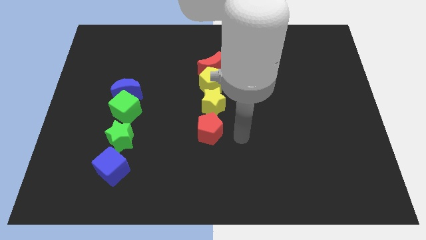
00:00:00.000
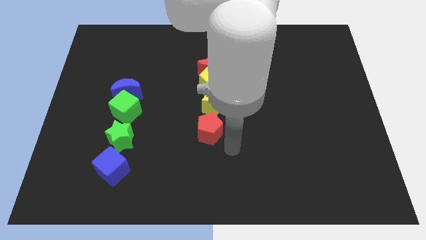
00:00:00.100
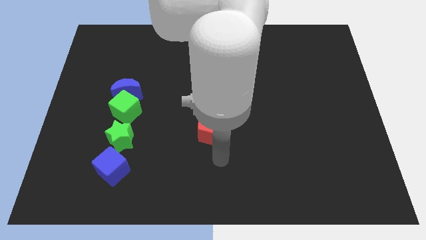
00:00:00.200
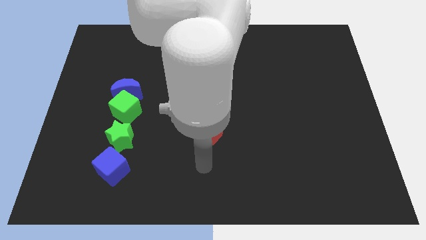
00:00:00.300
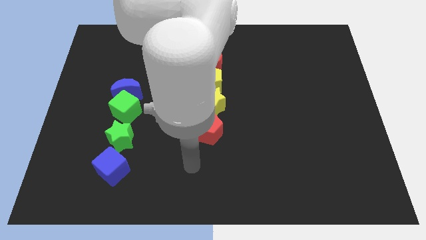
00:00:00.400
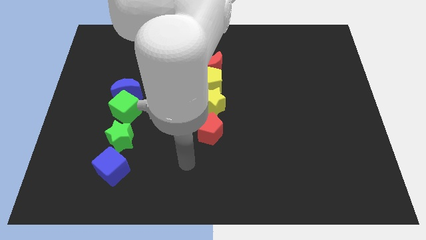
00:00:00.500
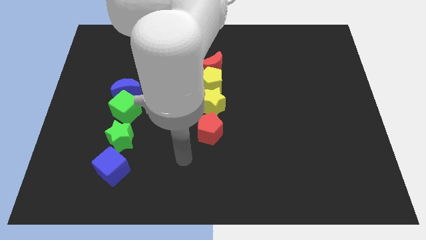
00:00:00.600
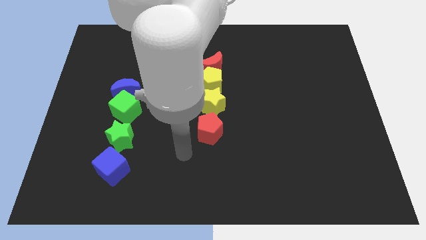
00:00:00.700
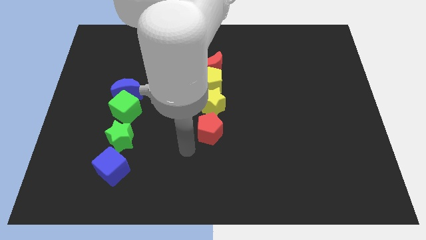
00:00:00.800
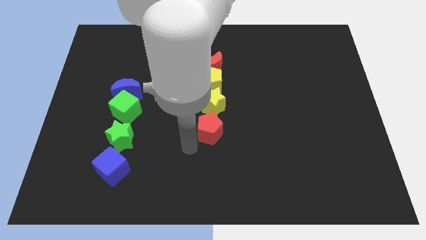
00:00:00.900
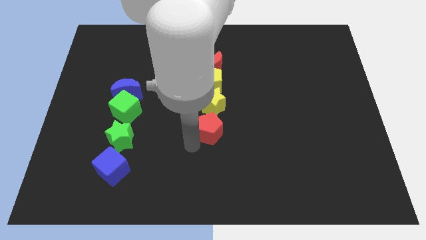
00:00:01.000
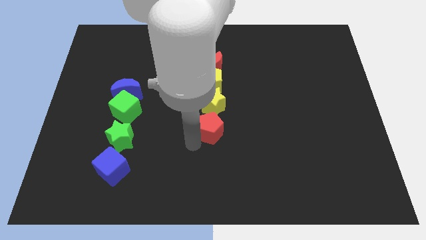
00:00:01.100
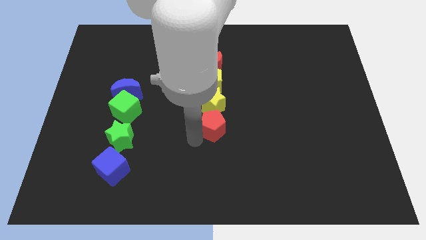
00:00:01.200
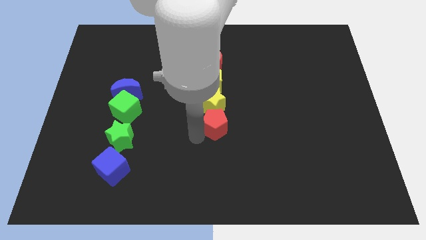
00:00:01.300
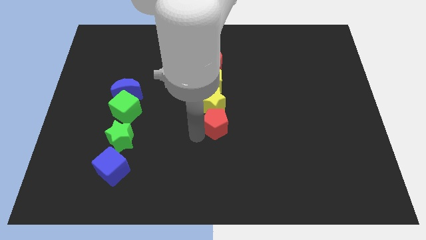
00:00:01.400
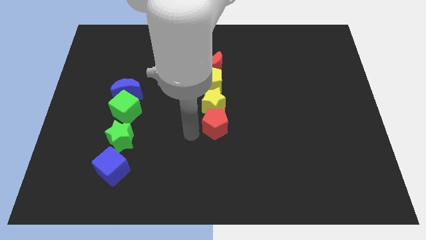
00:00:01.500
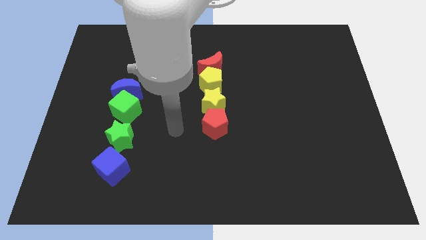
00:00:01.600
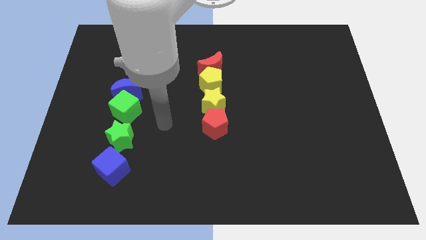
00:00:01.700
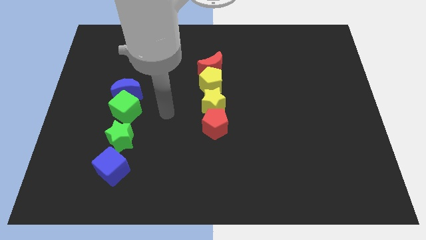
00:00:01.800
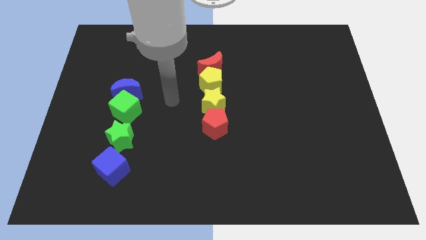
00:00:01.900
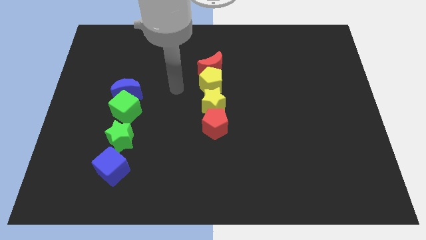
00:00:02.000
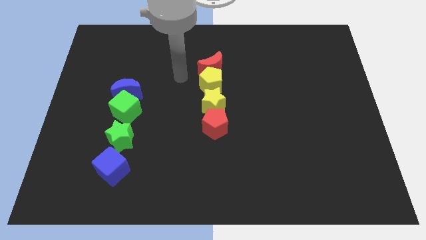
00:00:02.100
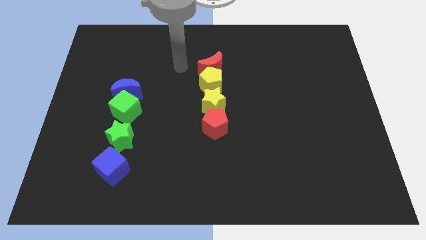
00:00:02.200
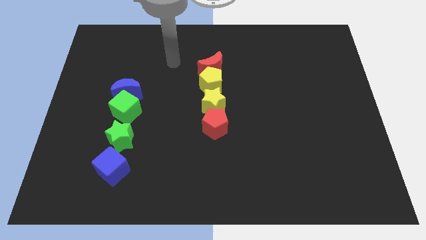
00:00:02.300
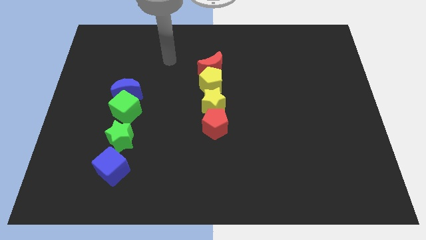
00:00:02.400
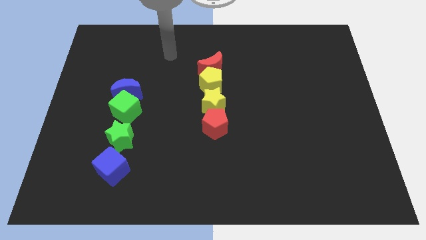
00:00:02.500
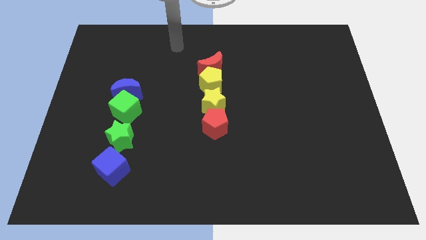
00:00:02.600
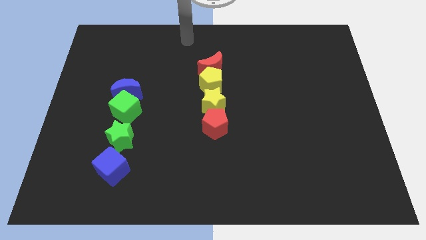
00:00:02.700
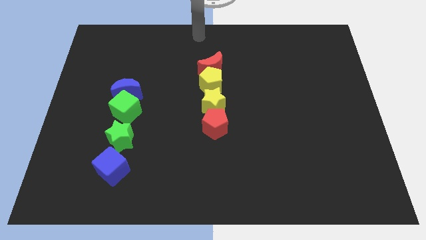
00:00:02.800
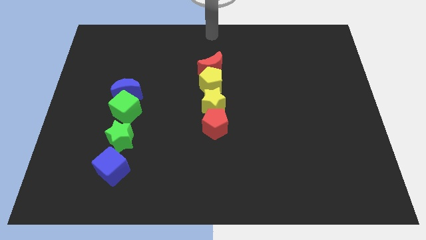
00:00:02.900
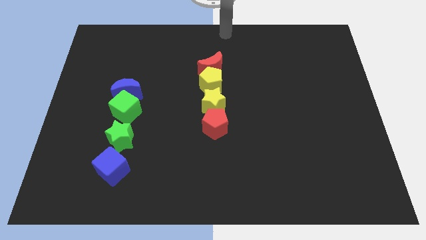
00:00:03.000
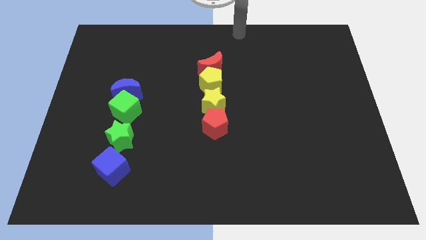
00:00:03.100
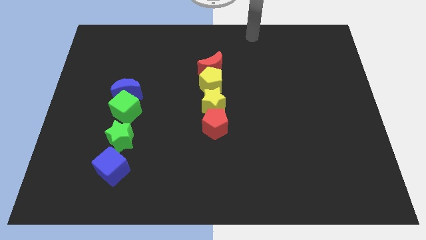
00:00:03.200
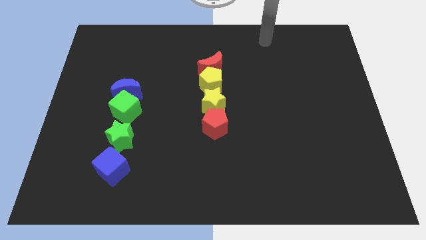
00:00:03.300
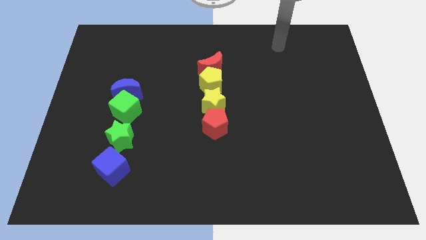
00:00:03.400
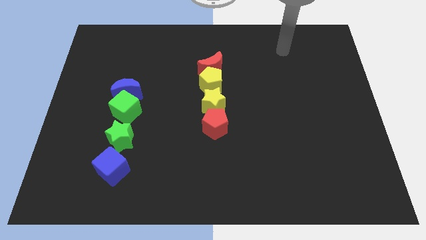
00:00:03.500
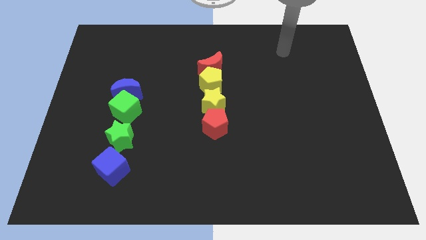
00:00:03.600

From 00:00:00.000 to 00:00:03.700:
push the red pentagon into the yellow star

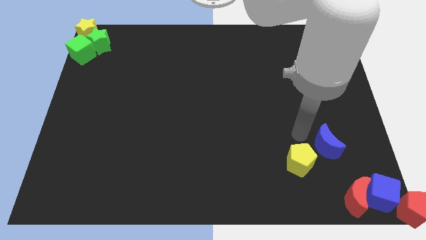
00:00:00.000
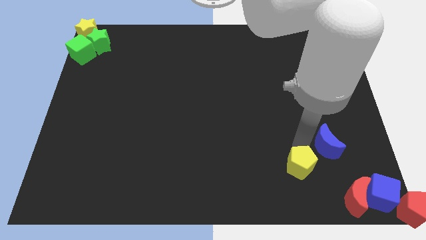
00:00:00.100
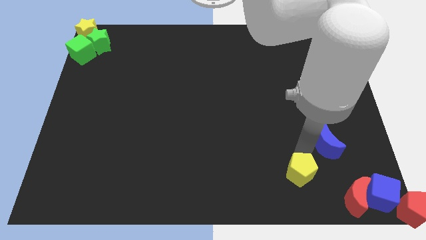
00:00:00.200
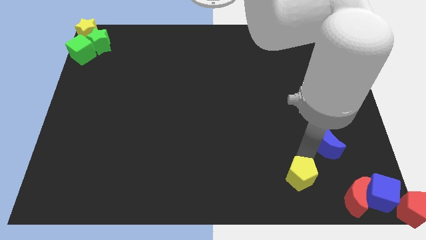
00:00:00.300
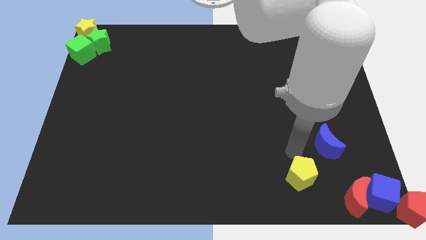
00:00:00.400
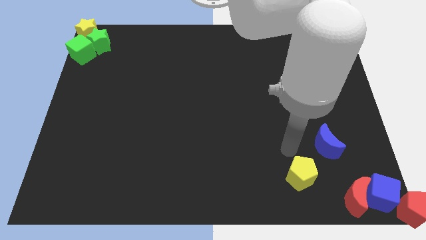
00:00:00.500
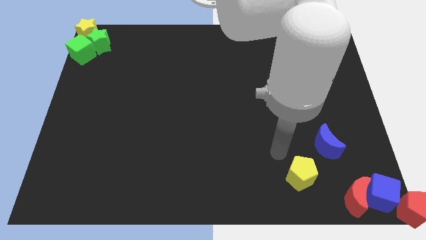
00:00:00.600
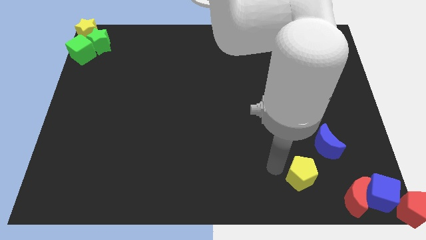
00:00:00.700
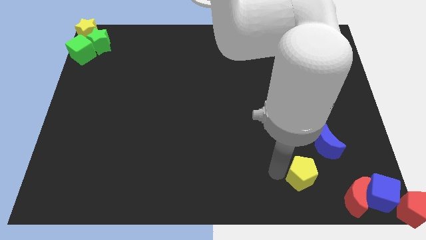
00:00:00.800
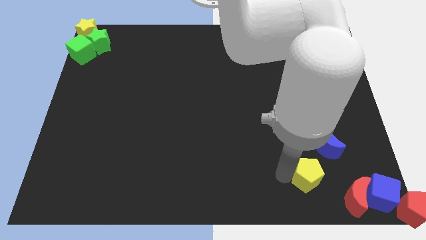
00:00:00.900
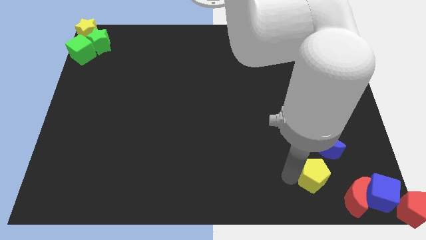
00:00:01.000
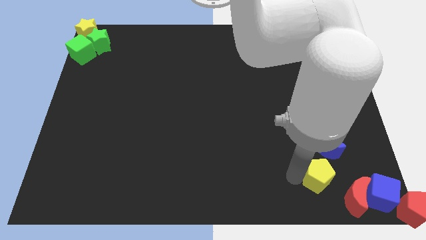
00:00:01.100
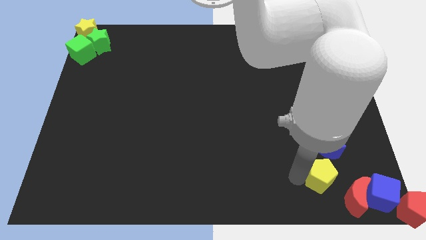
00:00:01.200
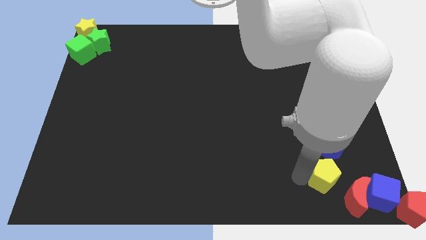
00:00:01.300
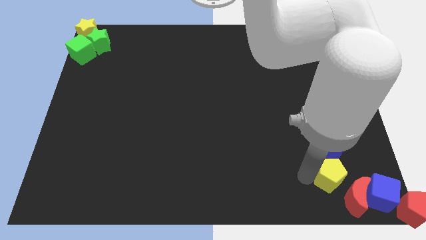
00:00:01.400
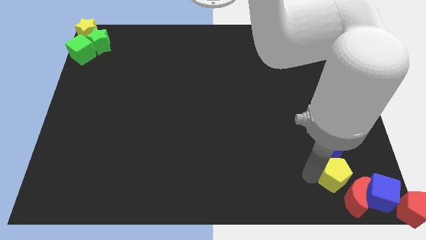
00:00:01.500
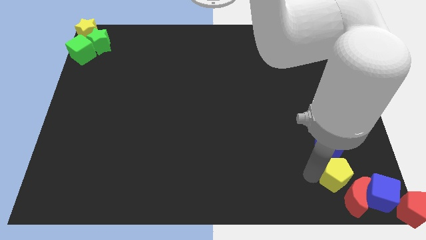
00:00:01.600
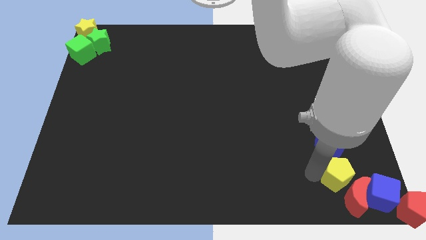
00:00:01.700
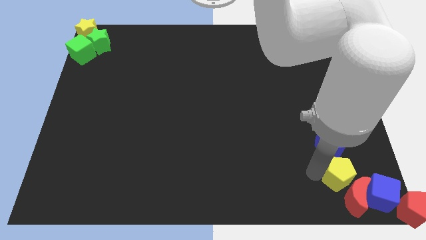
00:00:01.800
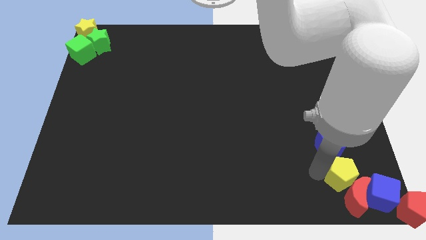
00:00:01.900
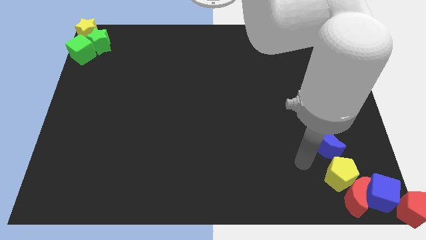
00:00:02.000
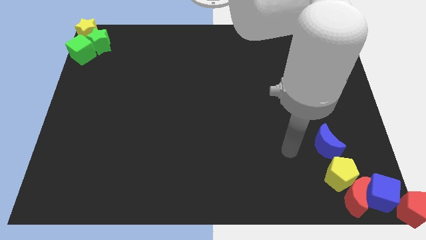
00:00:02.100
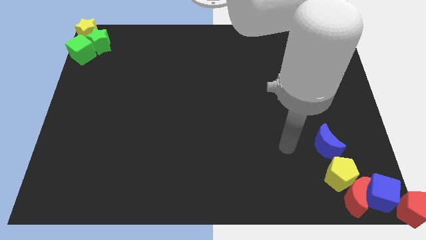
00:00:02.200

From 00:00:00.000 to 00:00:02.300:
place the yellow pentagon between the blue moon and red crescent

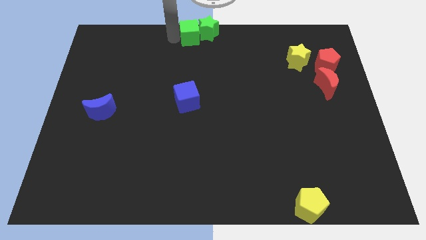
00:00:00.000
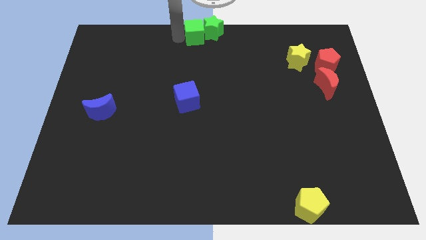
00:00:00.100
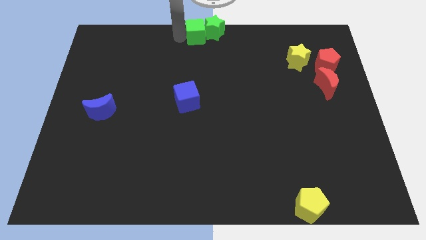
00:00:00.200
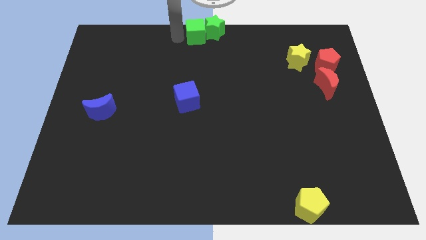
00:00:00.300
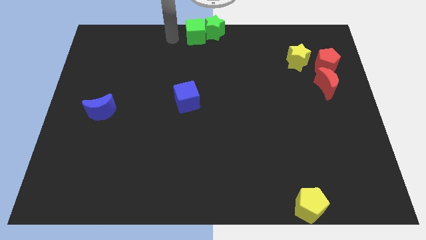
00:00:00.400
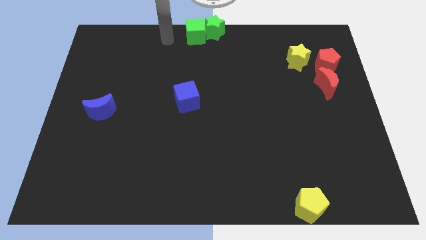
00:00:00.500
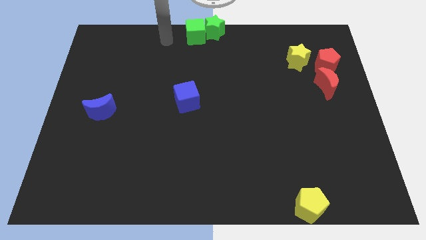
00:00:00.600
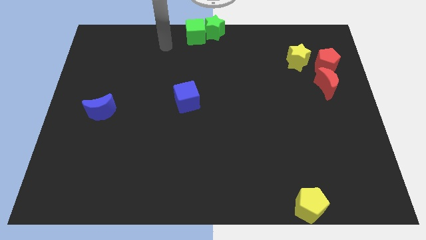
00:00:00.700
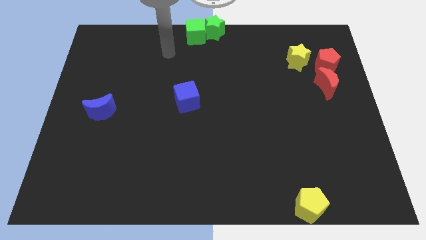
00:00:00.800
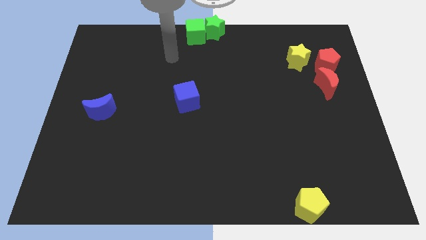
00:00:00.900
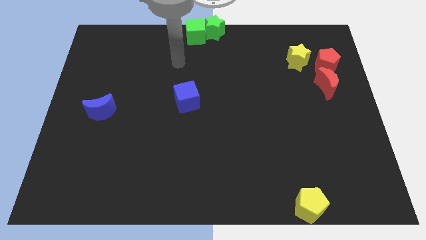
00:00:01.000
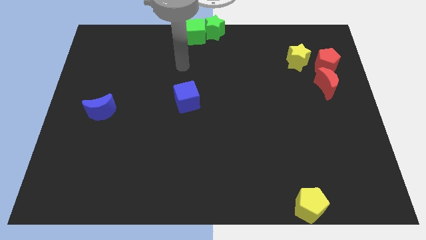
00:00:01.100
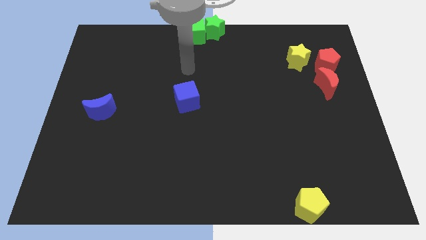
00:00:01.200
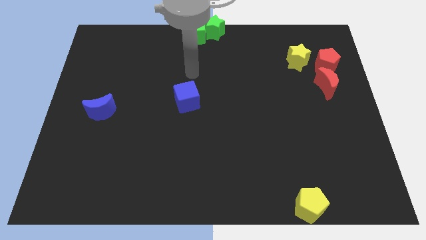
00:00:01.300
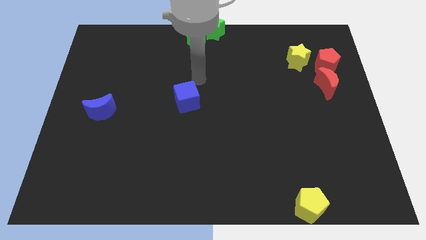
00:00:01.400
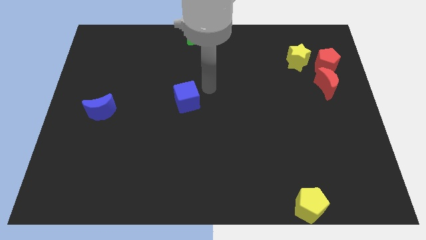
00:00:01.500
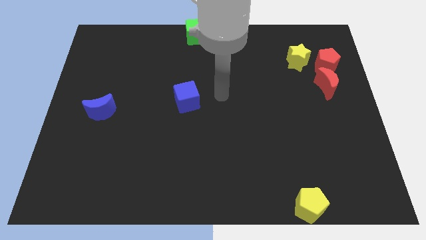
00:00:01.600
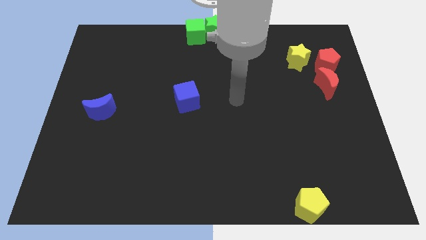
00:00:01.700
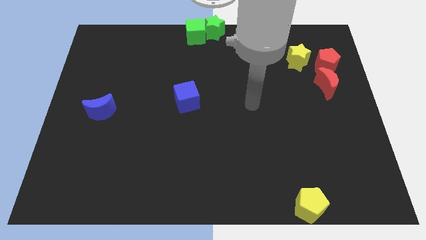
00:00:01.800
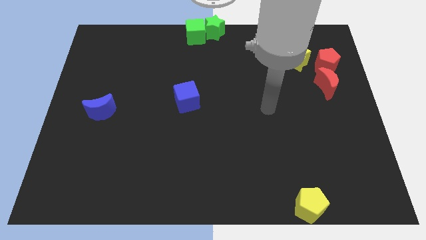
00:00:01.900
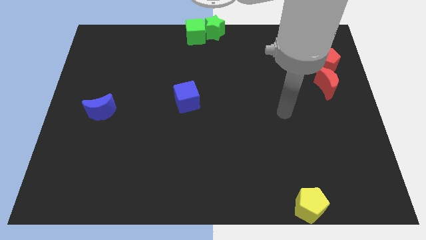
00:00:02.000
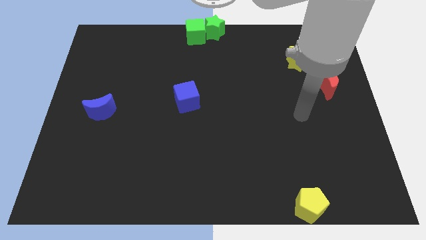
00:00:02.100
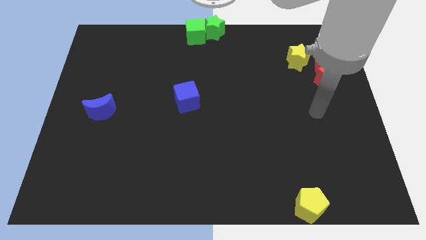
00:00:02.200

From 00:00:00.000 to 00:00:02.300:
move your arm to the bottom side of the red moon

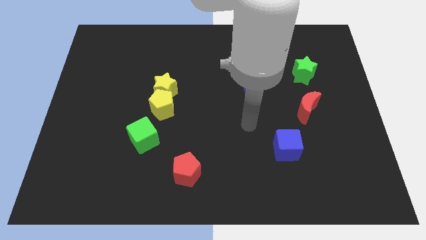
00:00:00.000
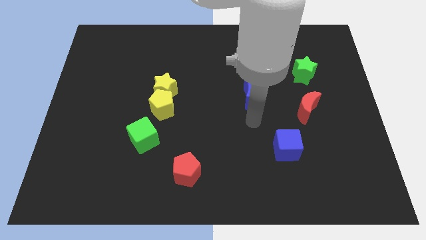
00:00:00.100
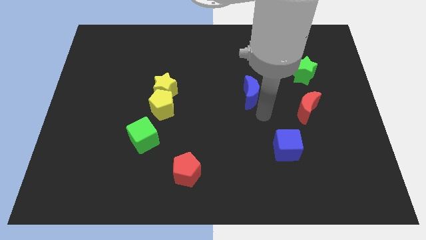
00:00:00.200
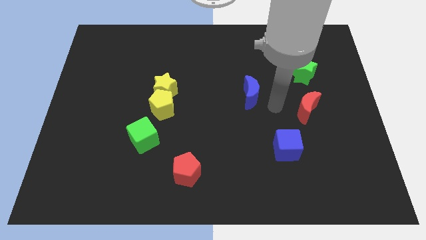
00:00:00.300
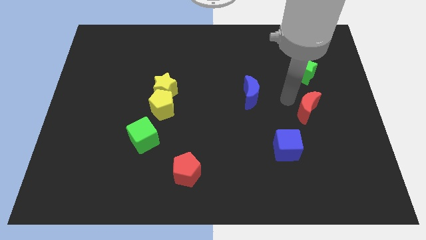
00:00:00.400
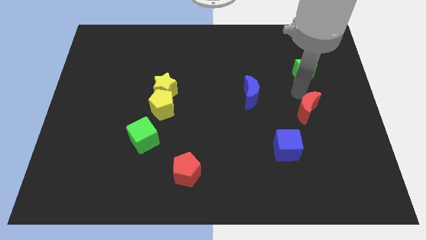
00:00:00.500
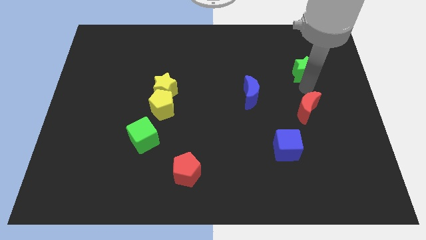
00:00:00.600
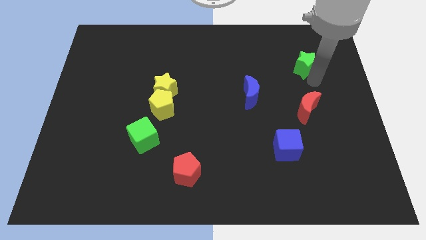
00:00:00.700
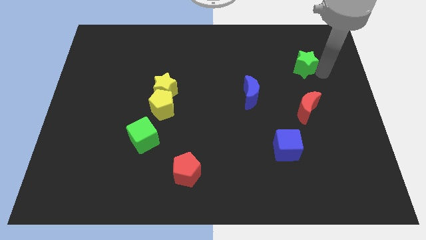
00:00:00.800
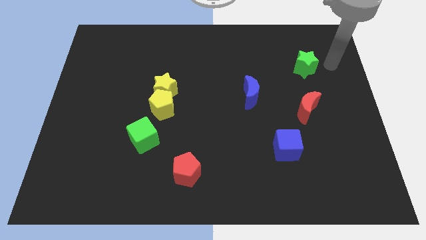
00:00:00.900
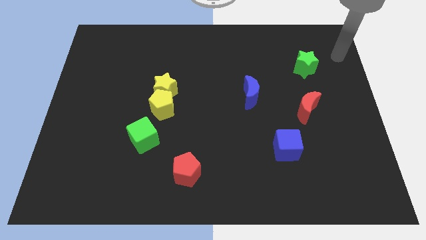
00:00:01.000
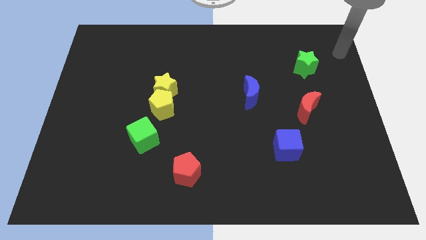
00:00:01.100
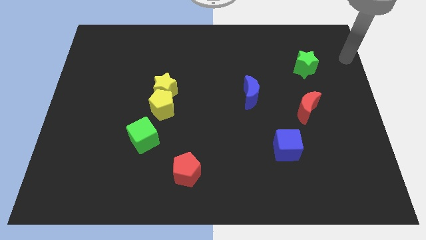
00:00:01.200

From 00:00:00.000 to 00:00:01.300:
tap the green star at the bottom right
